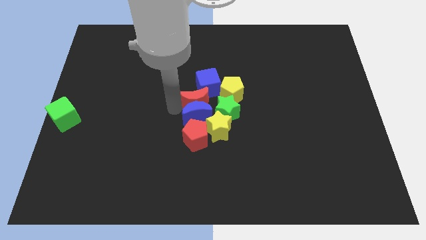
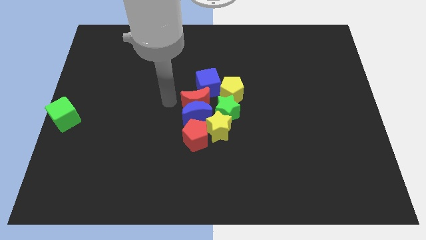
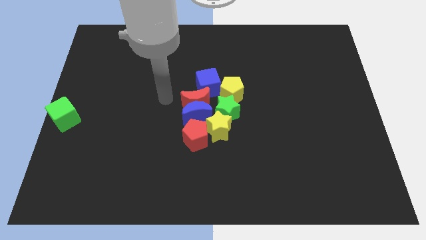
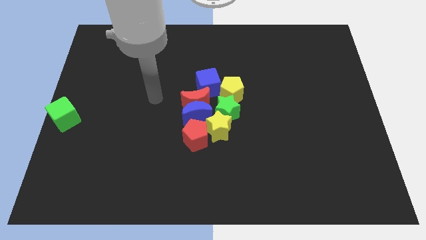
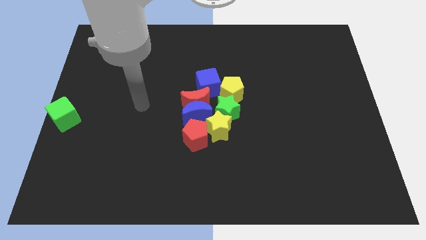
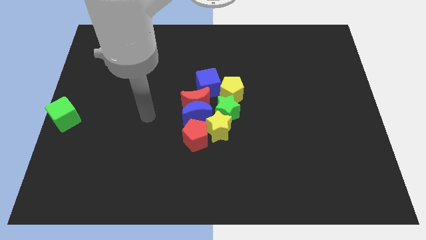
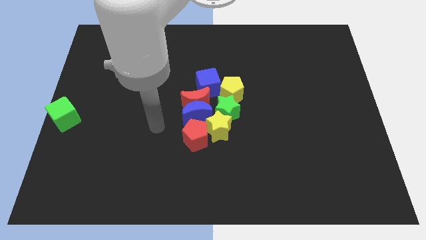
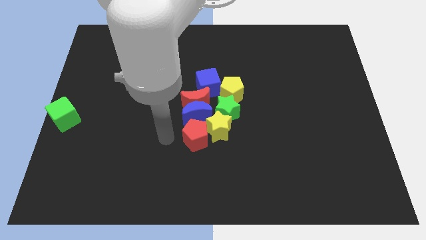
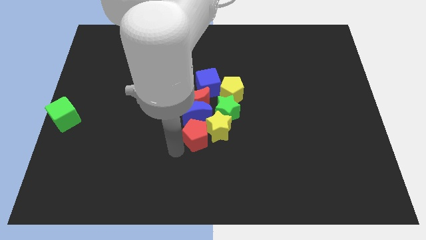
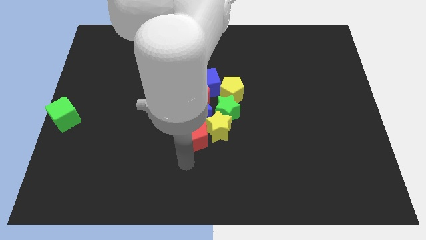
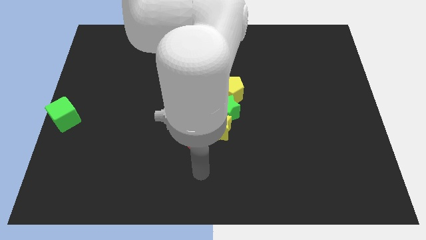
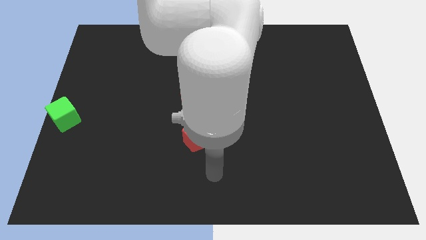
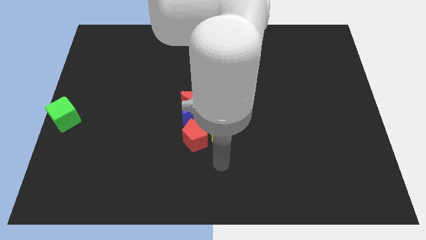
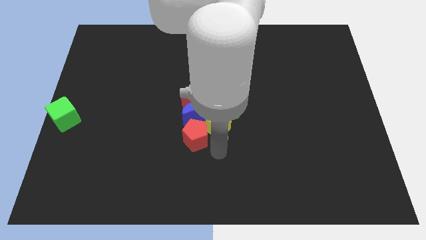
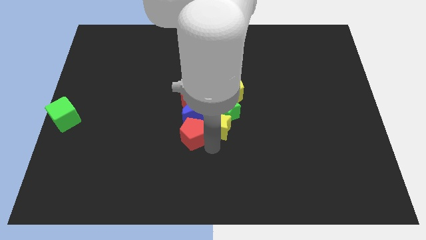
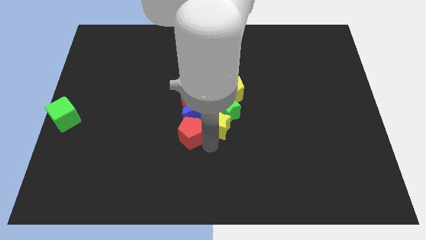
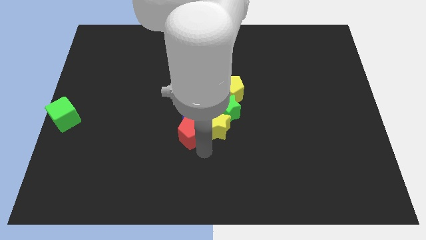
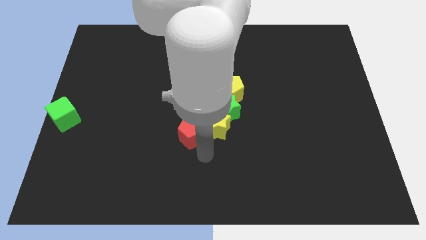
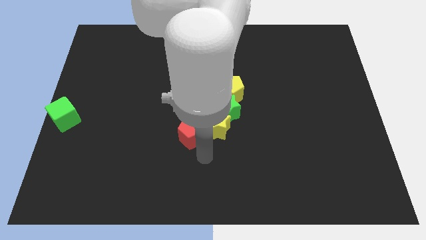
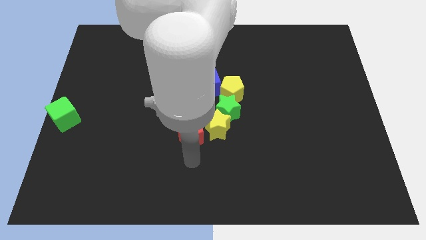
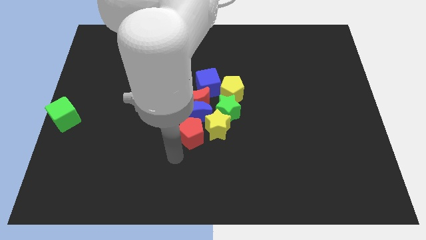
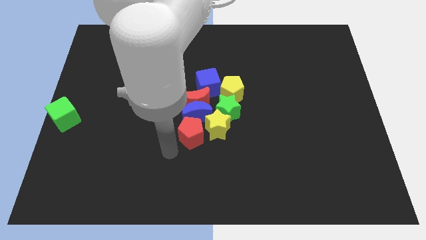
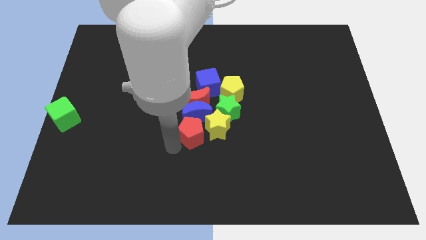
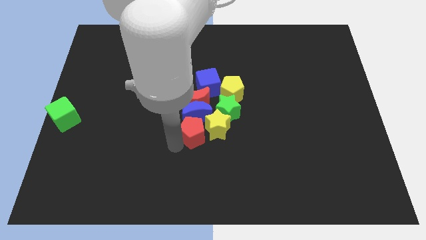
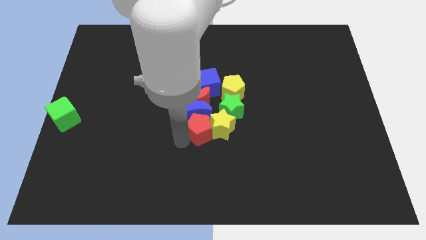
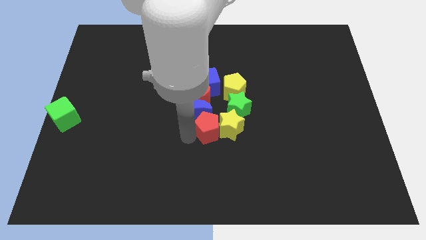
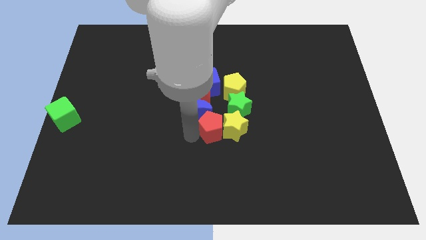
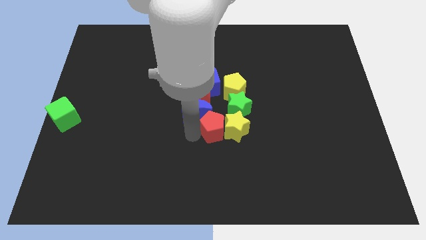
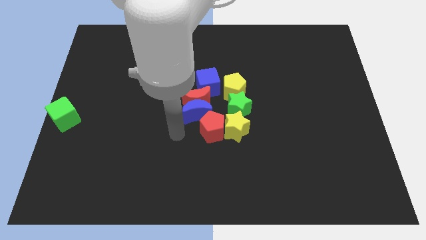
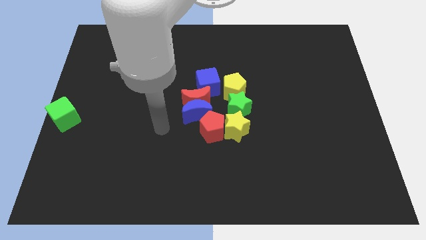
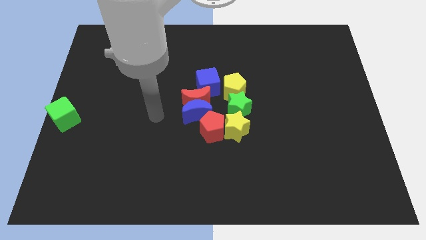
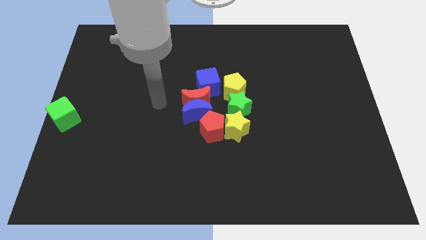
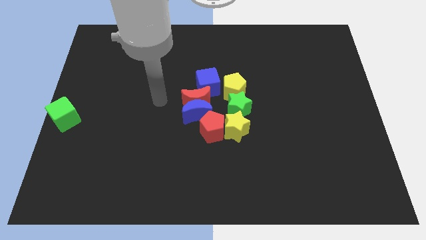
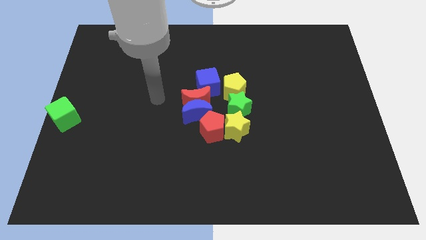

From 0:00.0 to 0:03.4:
adjust the red pentagon into the group of blocks

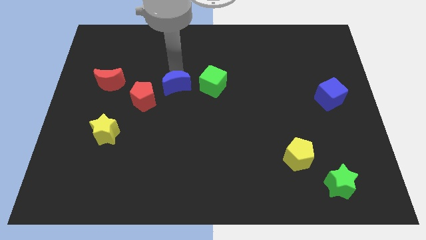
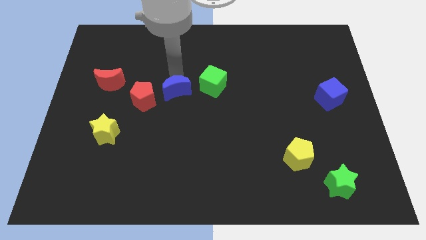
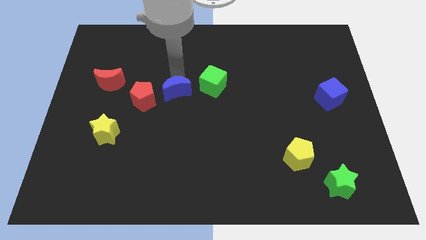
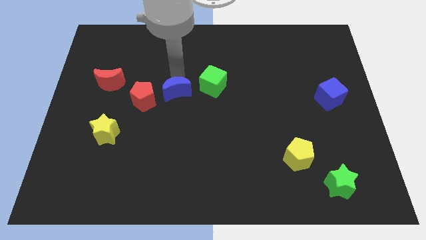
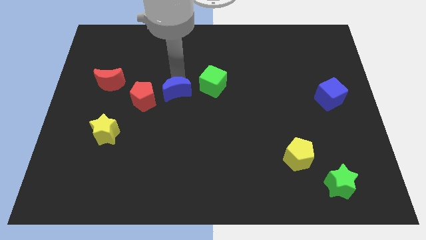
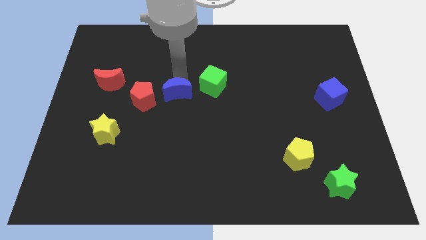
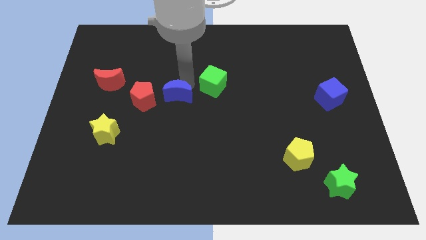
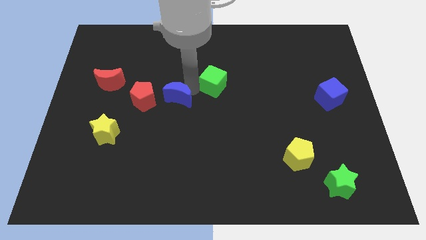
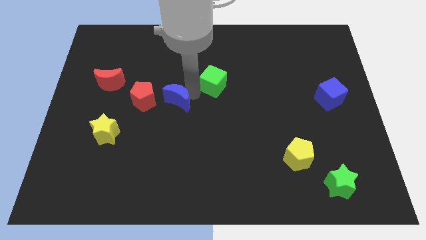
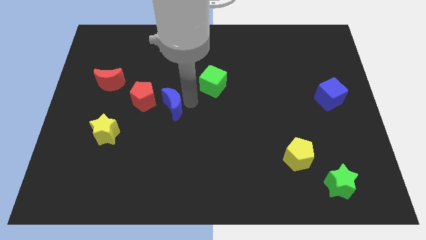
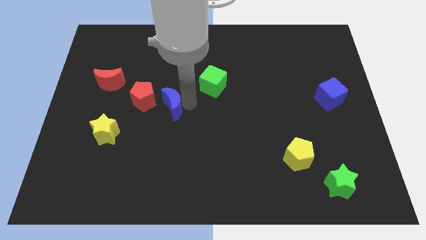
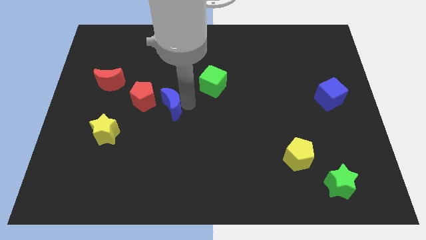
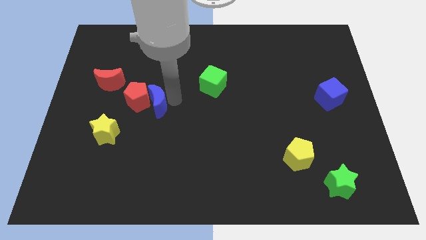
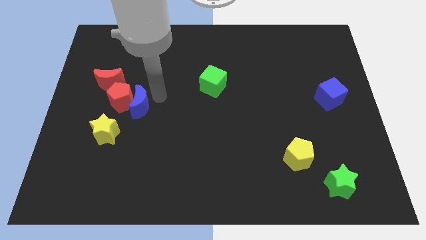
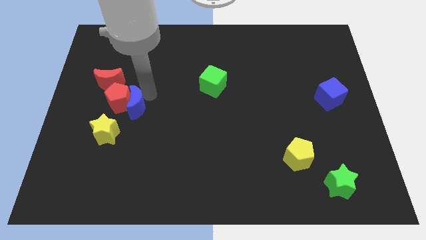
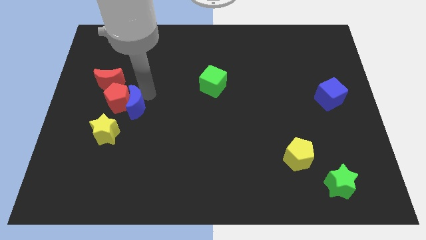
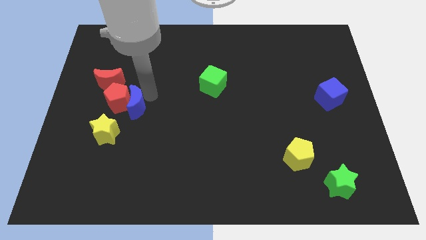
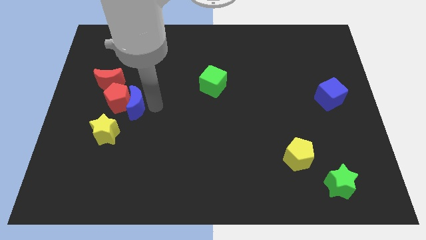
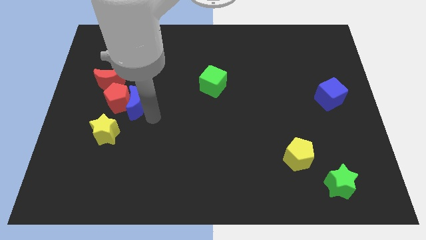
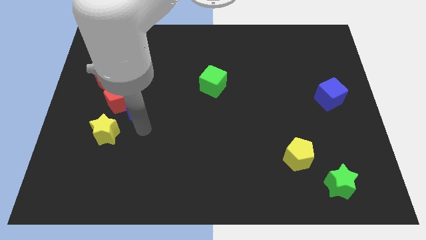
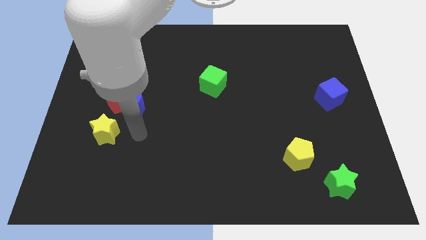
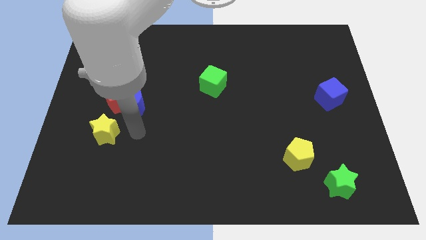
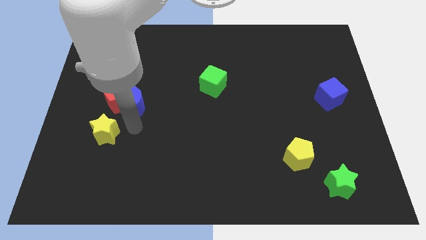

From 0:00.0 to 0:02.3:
push the blue moon into red pentagon

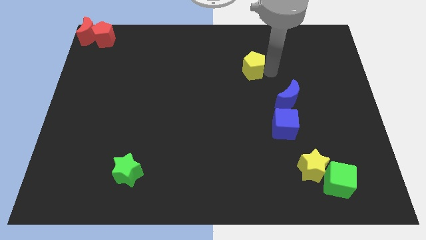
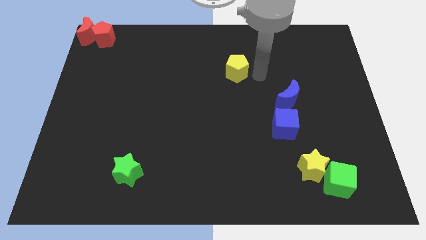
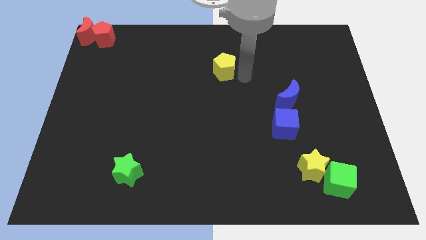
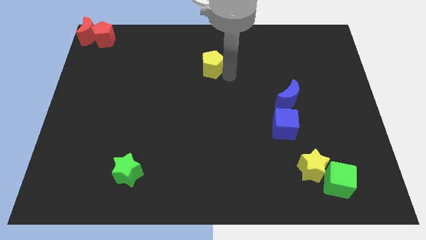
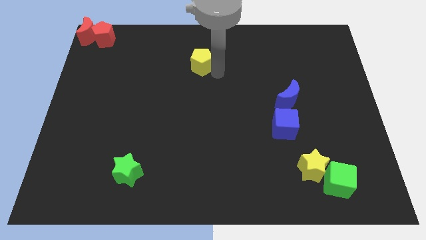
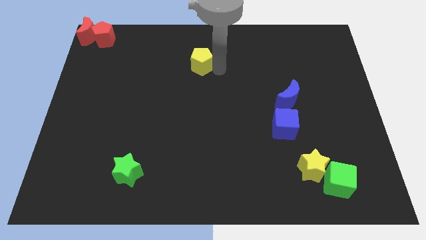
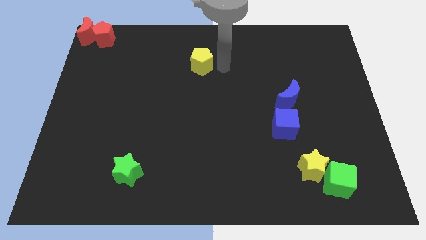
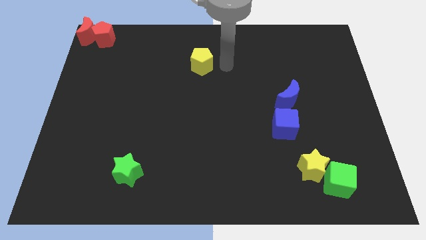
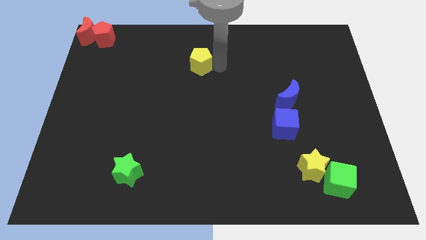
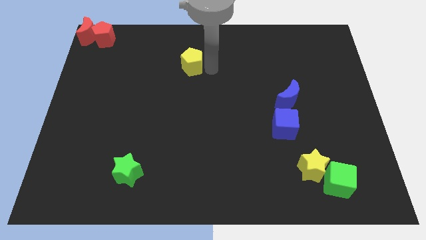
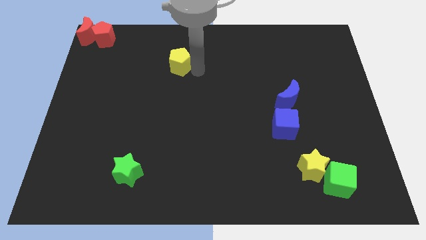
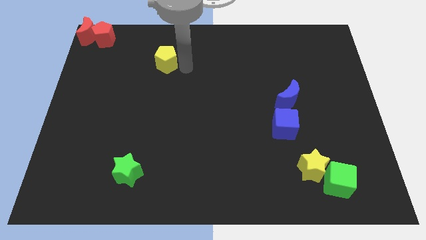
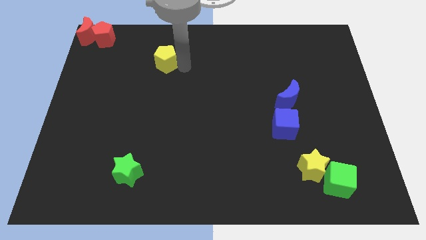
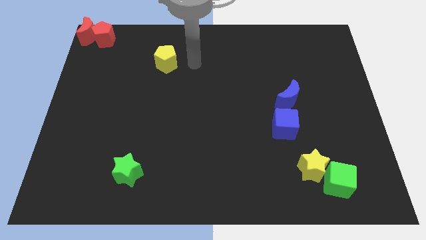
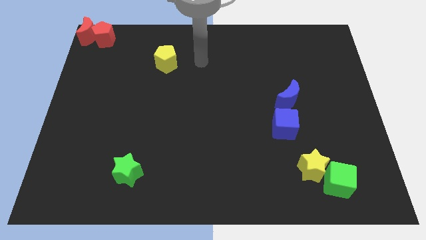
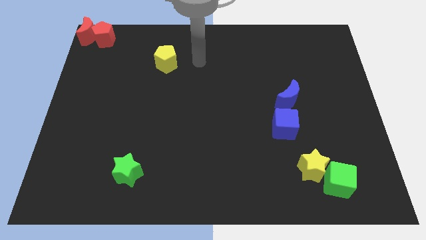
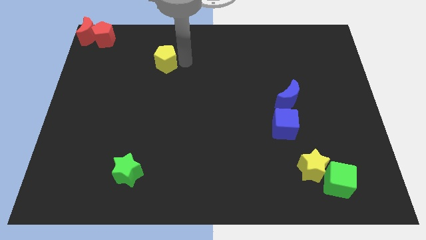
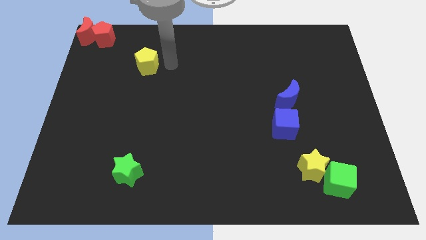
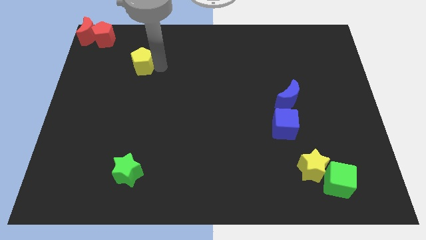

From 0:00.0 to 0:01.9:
place the yellow pentagon vertically above the green star

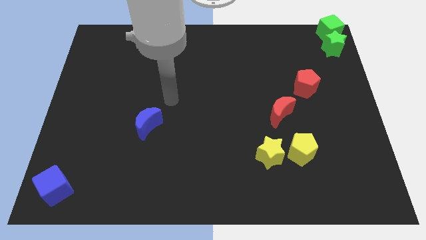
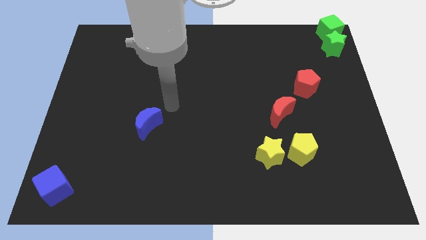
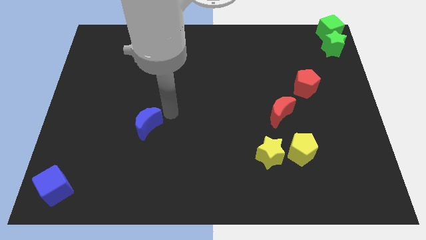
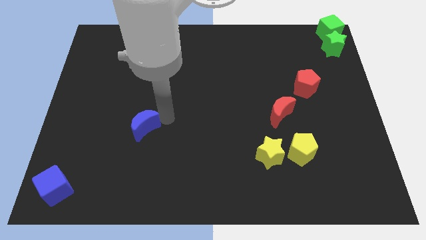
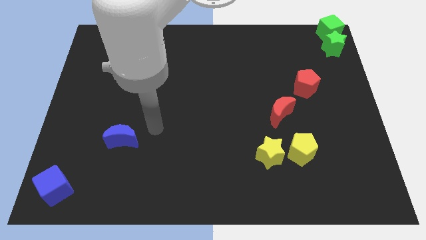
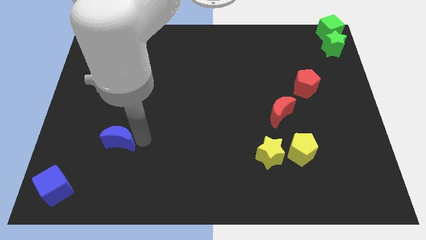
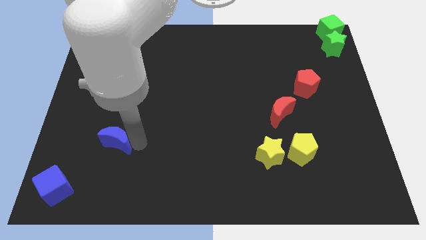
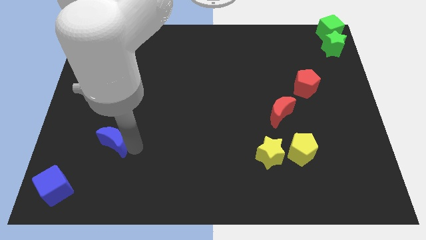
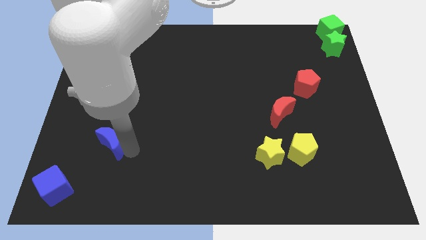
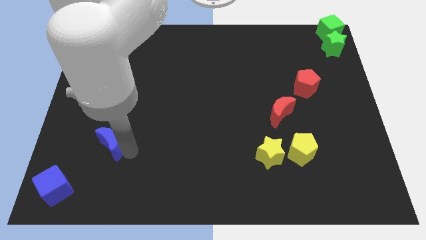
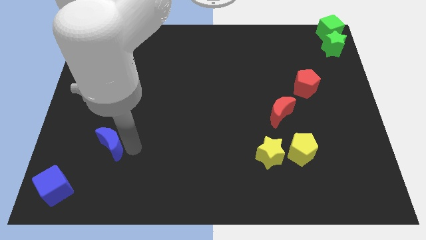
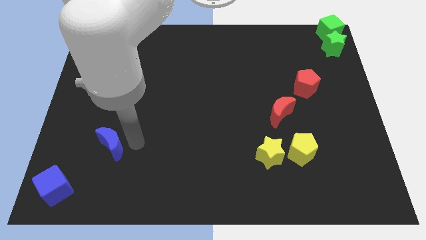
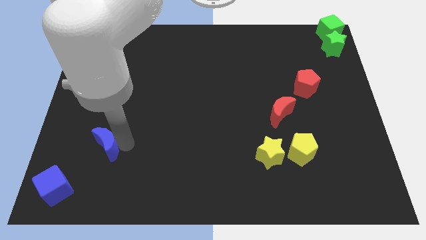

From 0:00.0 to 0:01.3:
place the blue moon diagonal to the blue cube

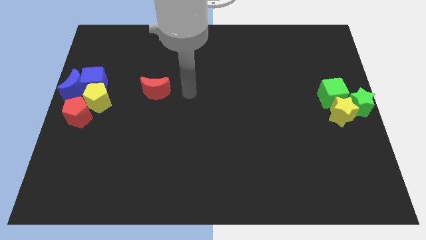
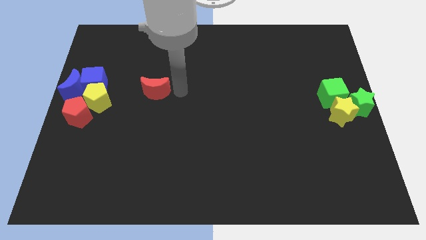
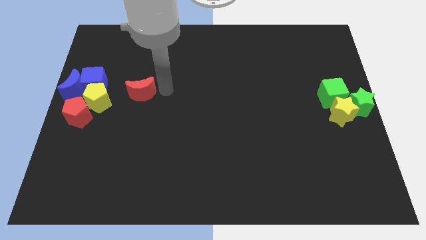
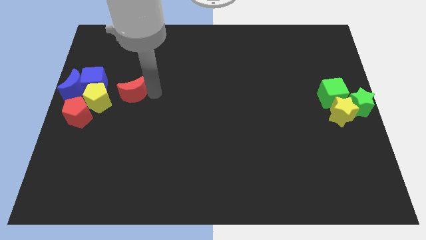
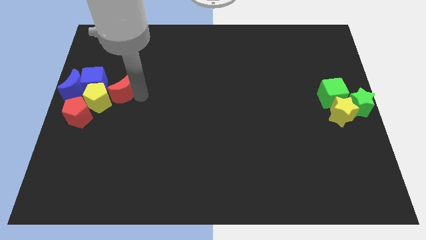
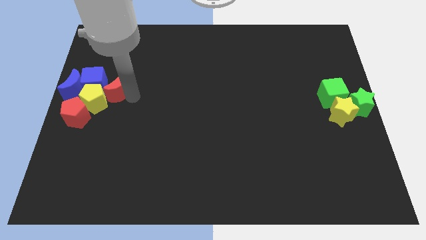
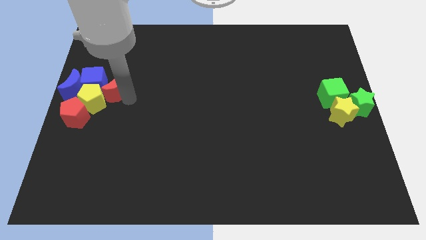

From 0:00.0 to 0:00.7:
push the red crescent into the blue cube and yellow pentagon from the right
